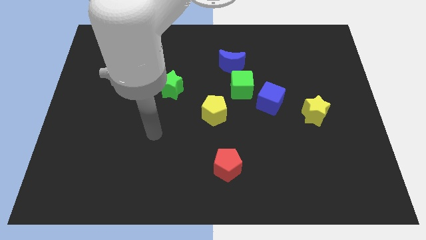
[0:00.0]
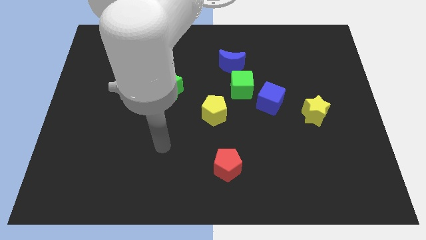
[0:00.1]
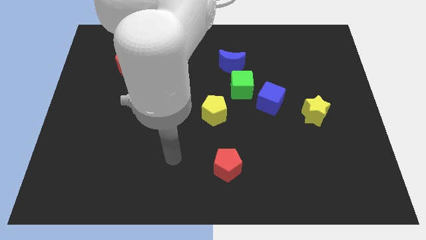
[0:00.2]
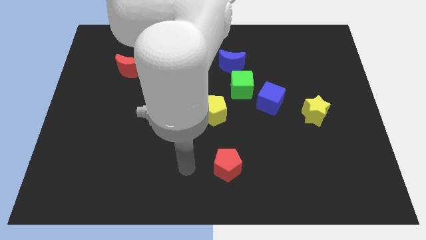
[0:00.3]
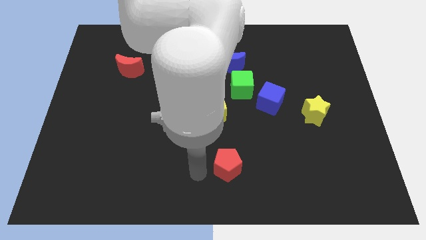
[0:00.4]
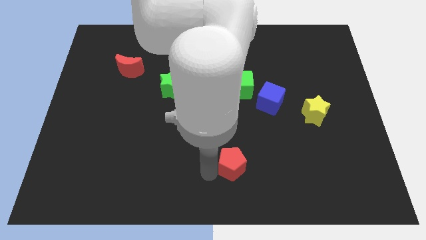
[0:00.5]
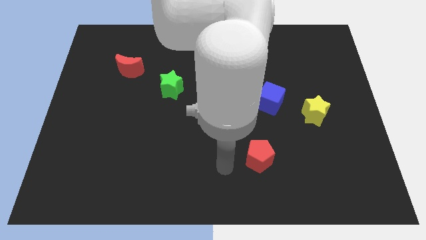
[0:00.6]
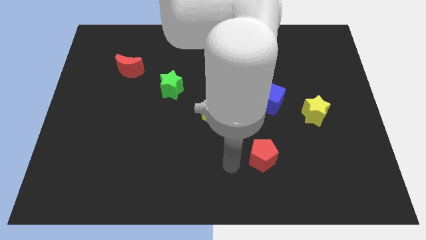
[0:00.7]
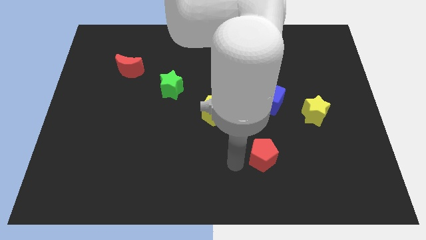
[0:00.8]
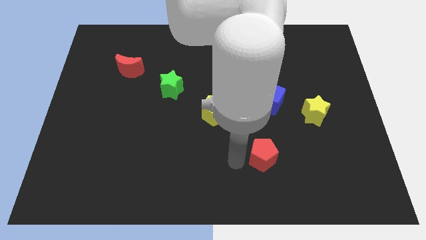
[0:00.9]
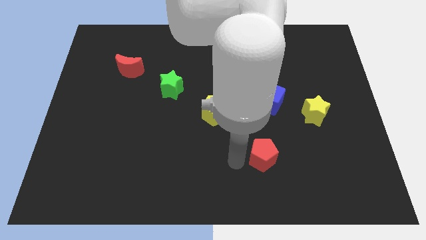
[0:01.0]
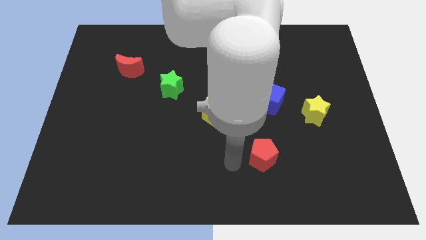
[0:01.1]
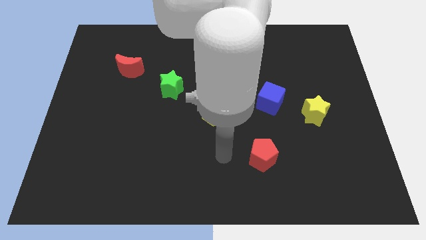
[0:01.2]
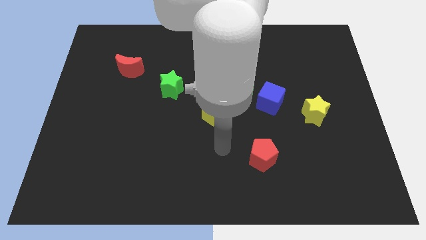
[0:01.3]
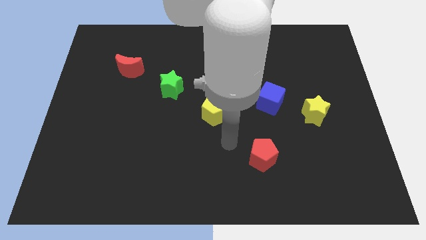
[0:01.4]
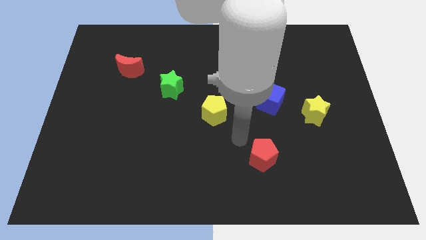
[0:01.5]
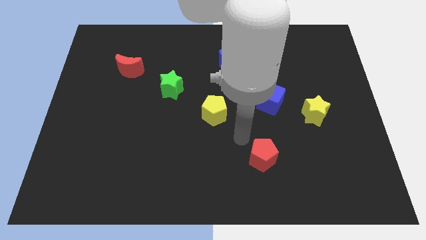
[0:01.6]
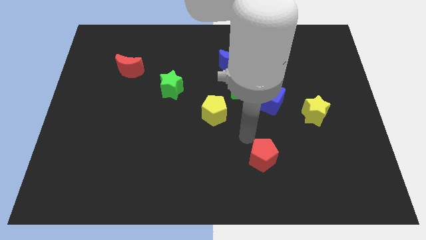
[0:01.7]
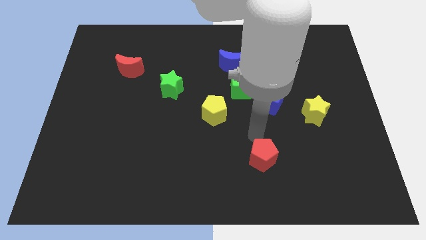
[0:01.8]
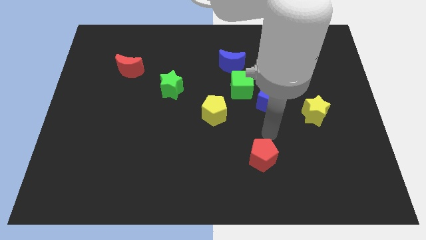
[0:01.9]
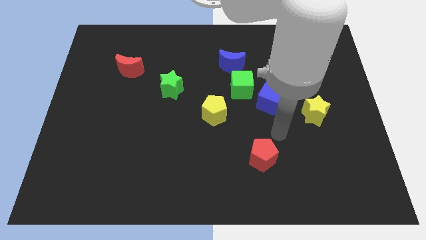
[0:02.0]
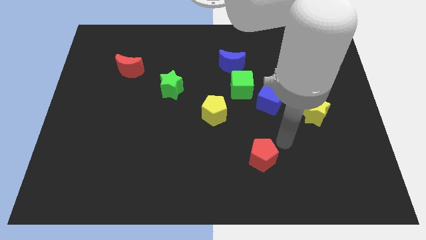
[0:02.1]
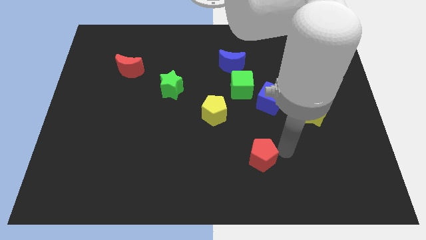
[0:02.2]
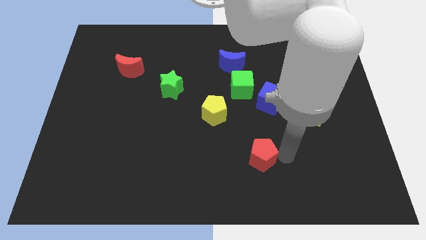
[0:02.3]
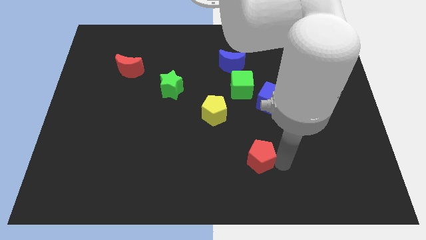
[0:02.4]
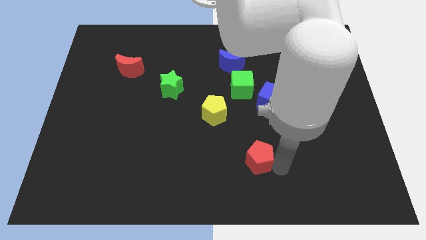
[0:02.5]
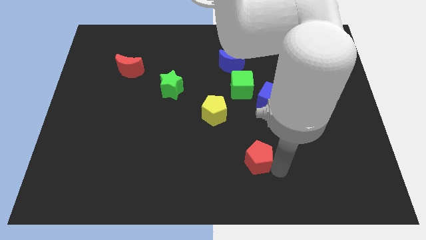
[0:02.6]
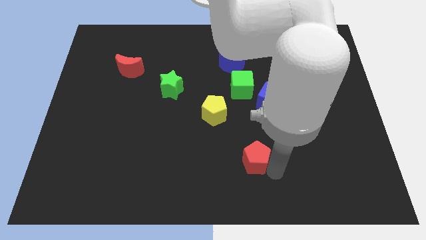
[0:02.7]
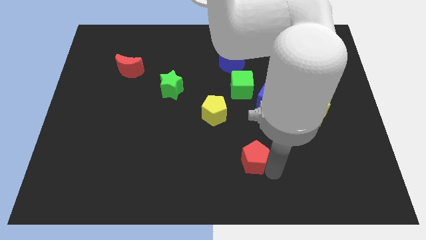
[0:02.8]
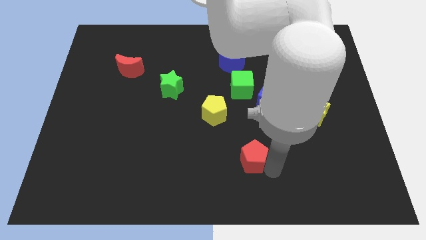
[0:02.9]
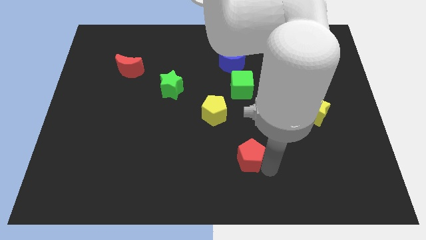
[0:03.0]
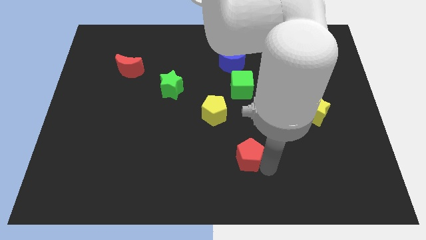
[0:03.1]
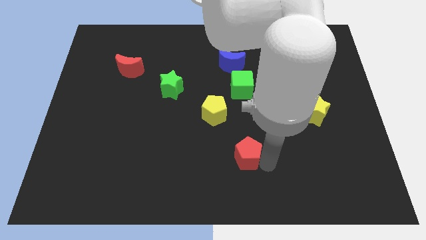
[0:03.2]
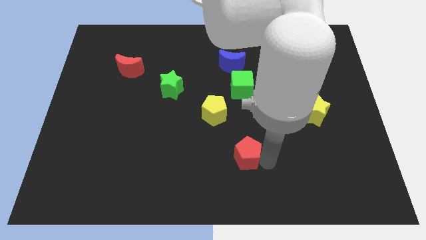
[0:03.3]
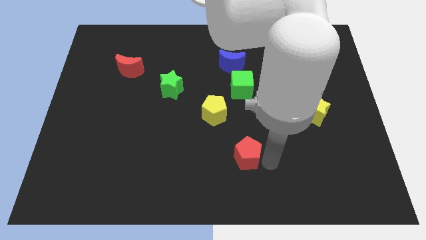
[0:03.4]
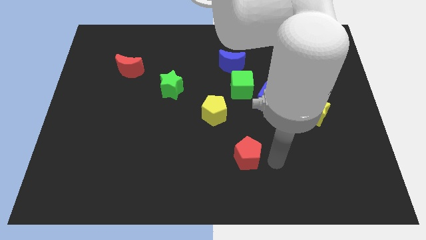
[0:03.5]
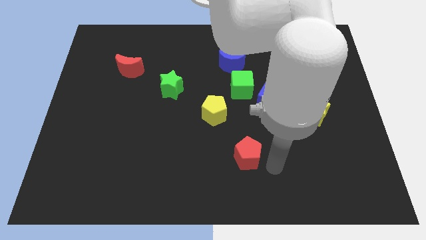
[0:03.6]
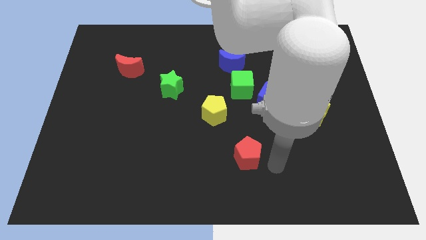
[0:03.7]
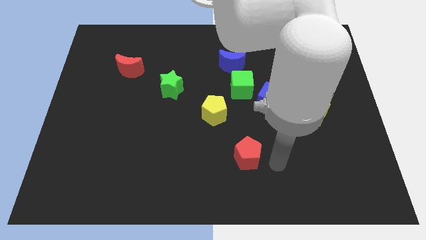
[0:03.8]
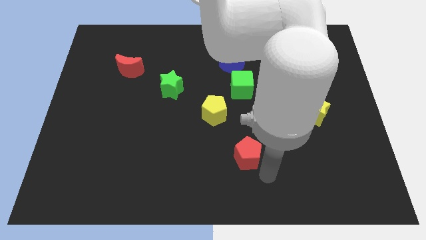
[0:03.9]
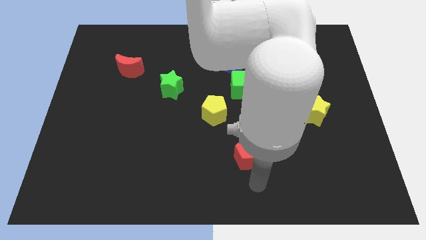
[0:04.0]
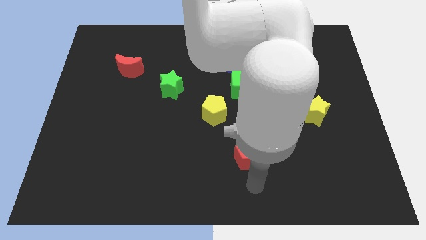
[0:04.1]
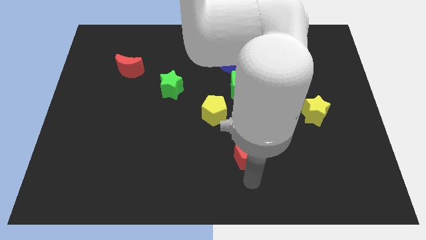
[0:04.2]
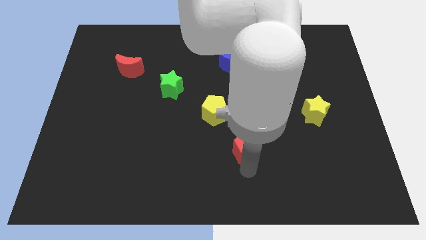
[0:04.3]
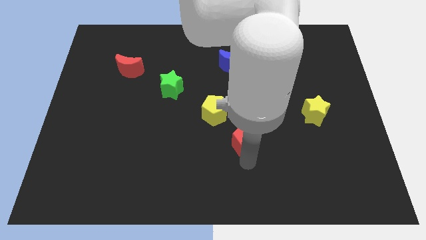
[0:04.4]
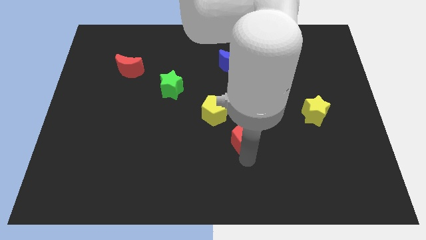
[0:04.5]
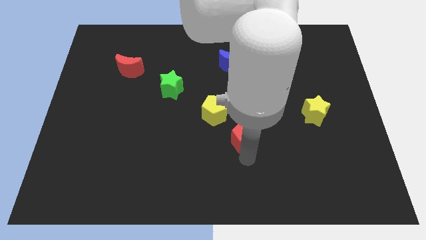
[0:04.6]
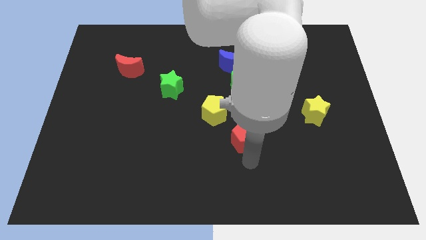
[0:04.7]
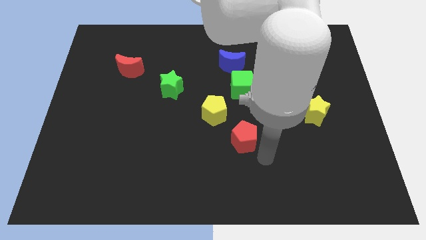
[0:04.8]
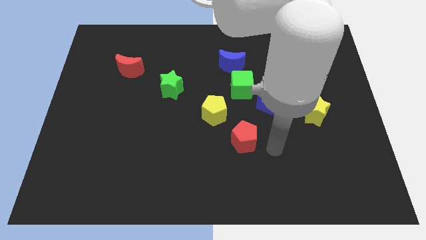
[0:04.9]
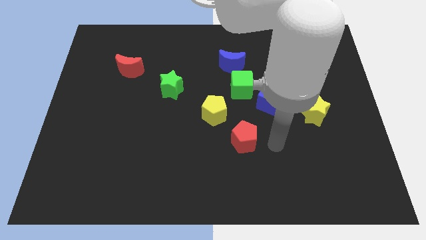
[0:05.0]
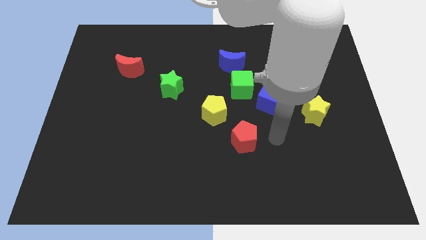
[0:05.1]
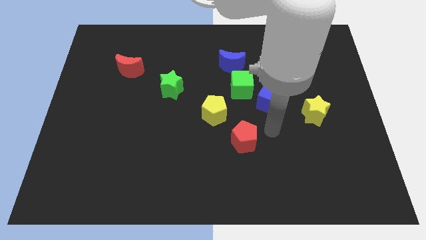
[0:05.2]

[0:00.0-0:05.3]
place the red pentagon diagonal to the yellow pentagon

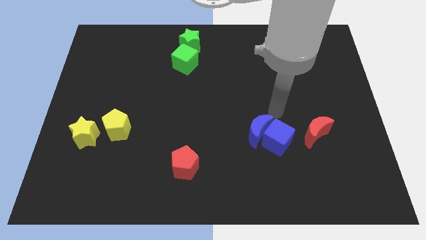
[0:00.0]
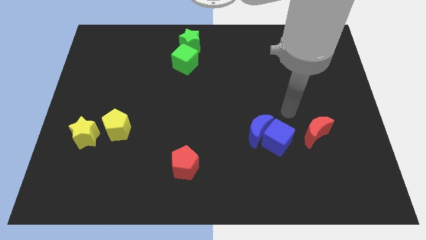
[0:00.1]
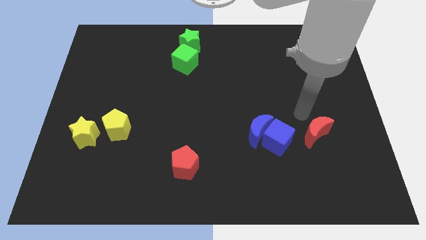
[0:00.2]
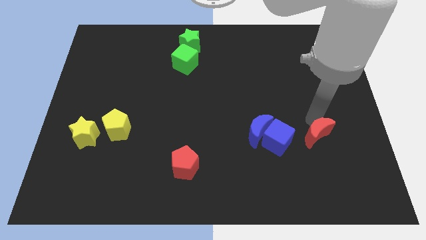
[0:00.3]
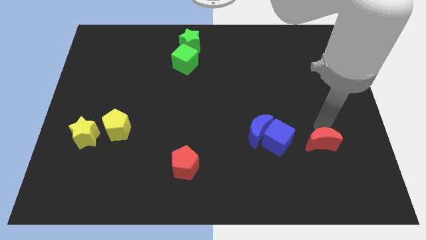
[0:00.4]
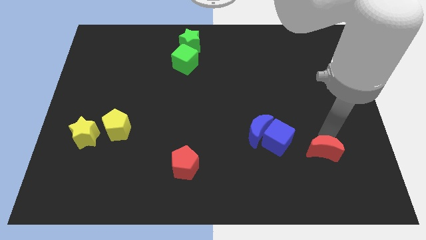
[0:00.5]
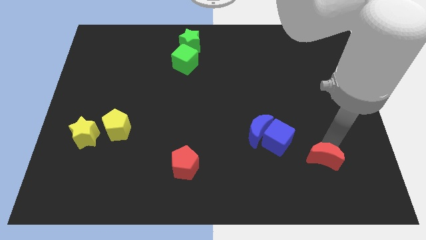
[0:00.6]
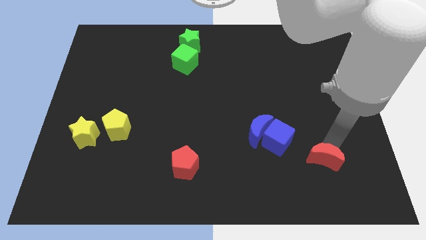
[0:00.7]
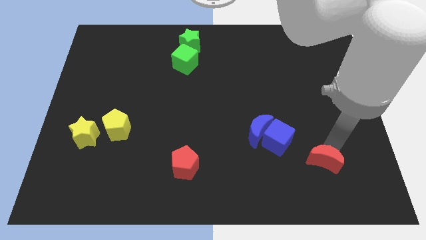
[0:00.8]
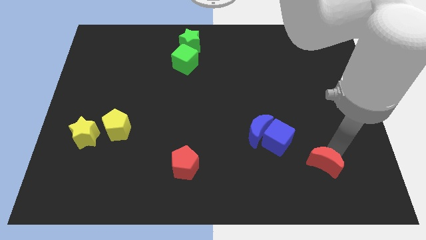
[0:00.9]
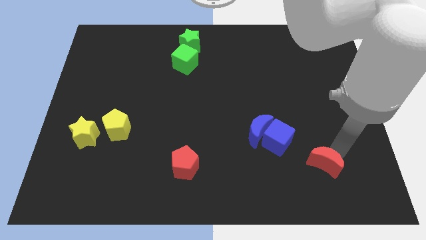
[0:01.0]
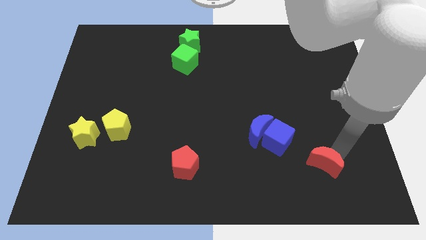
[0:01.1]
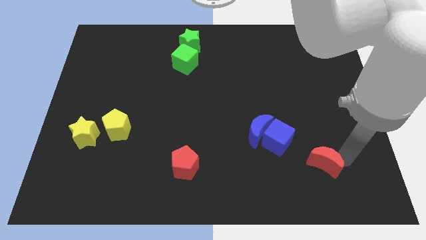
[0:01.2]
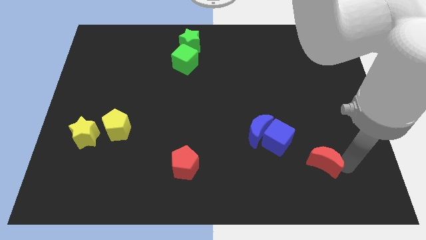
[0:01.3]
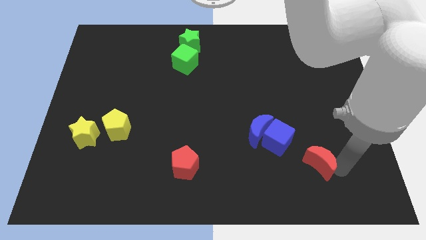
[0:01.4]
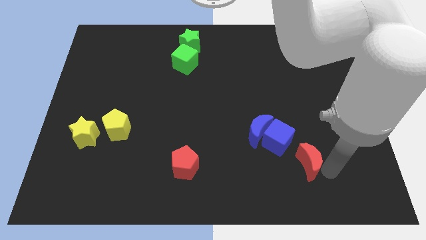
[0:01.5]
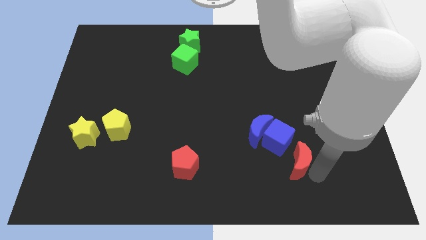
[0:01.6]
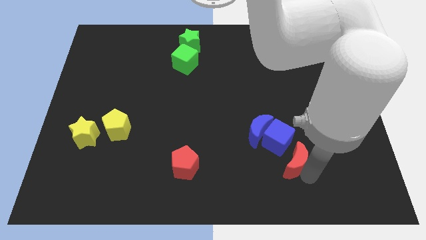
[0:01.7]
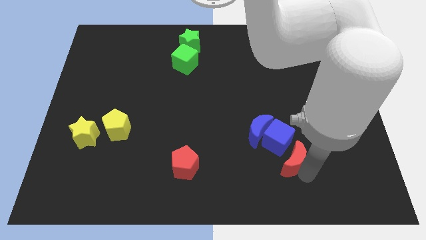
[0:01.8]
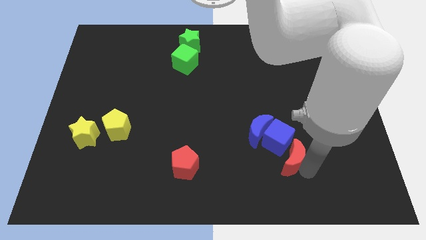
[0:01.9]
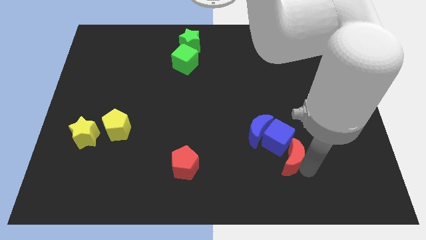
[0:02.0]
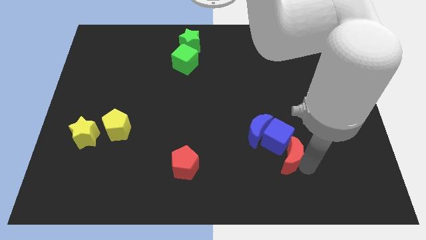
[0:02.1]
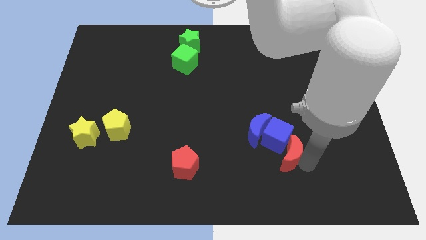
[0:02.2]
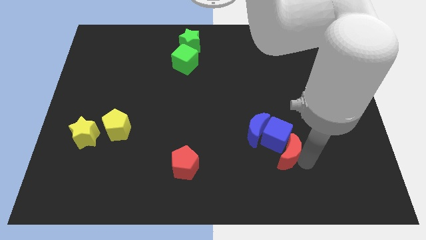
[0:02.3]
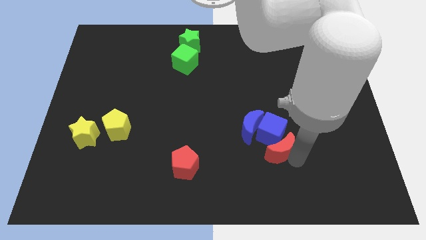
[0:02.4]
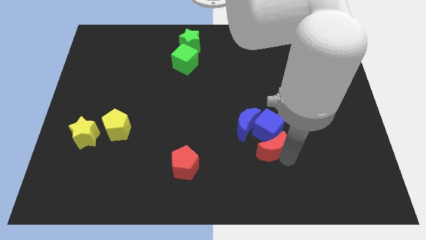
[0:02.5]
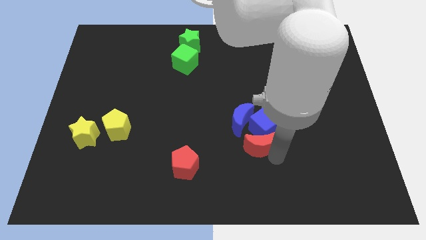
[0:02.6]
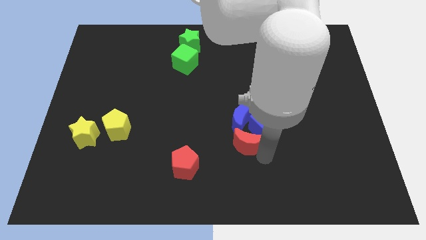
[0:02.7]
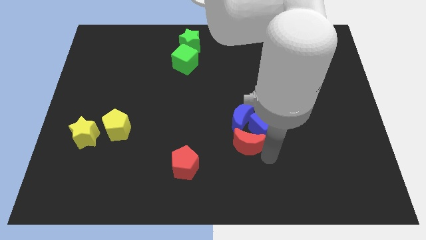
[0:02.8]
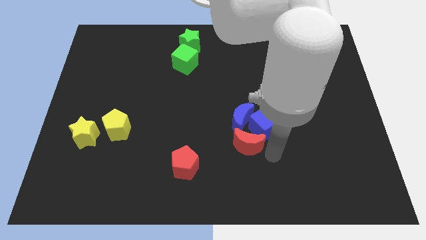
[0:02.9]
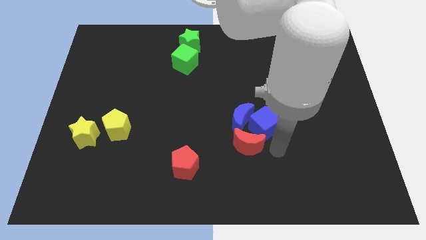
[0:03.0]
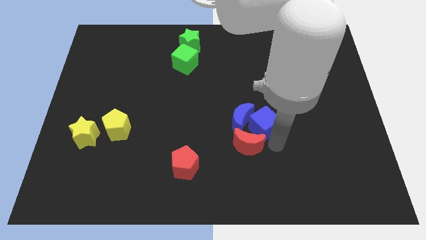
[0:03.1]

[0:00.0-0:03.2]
push the red moon into the bottom side of the blue moon and blue cube

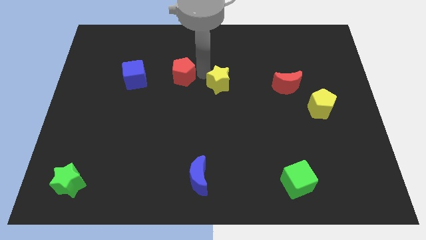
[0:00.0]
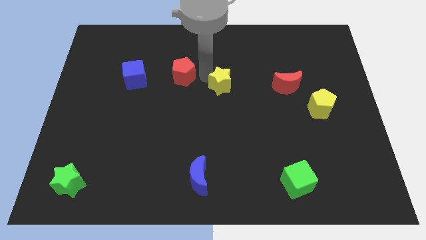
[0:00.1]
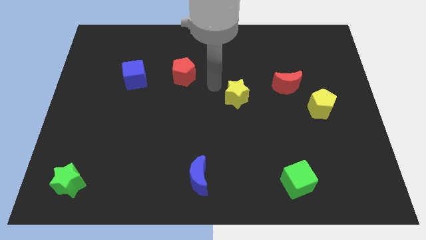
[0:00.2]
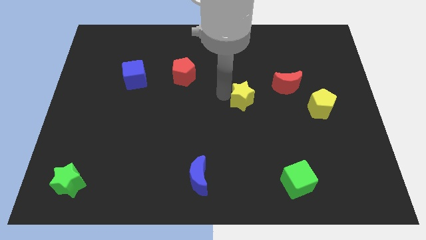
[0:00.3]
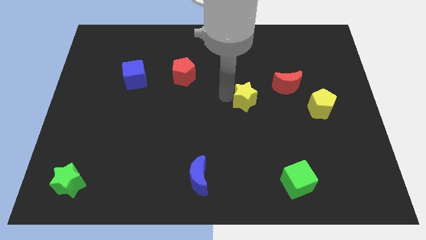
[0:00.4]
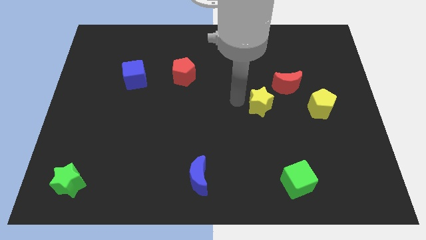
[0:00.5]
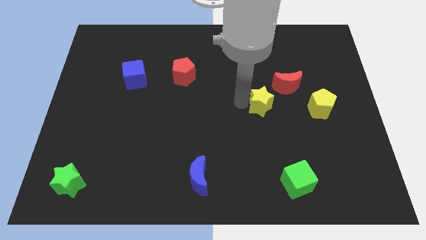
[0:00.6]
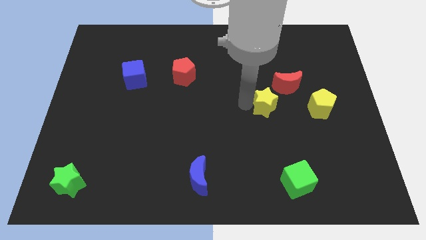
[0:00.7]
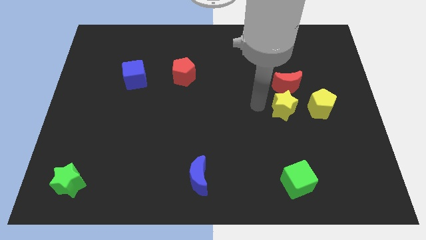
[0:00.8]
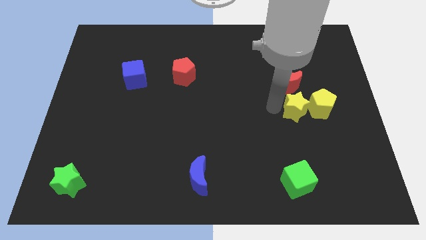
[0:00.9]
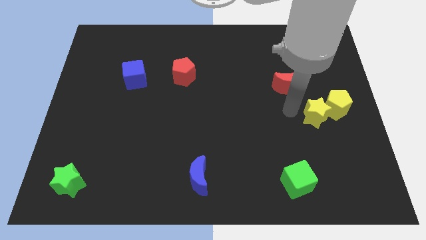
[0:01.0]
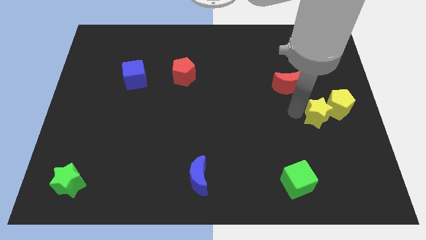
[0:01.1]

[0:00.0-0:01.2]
move the yellow star to the left side of the yellow pentagon
